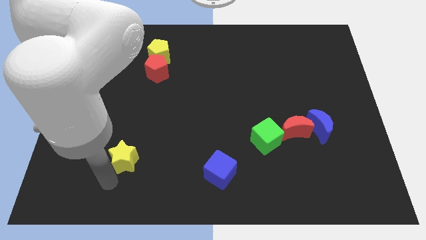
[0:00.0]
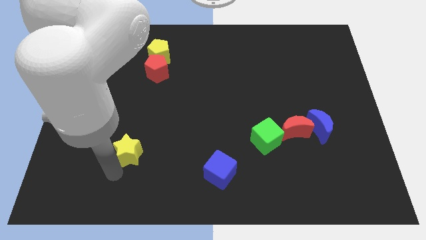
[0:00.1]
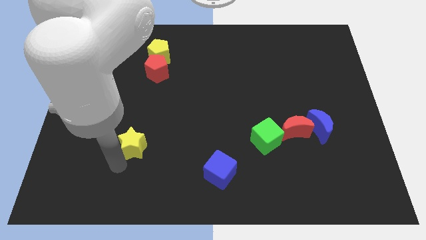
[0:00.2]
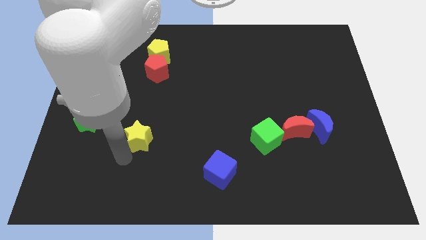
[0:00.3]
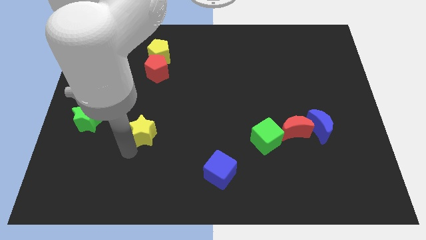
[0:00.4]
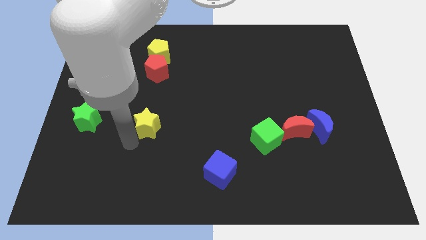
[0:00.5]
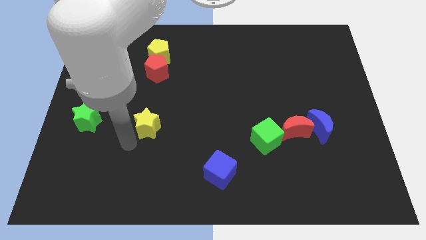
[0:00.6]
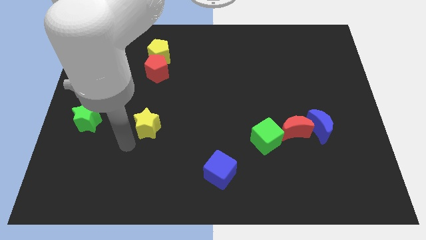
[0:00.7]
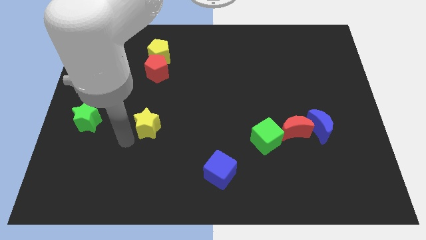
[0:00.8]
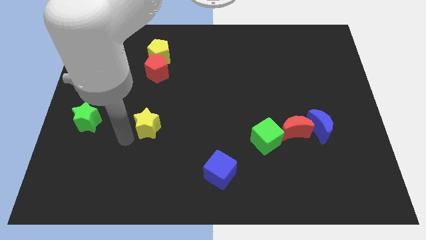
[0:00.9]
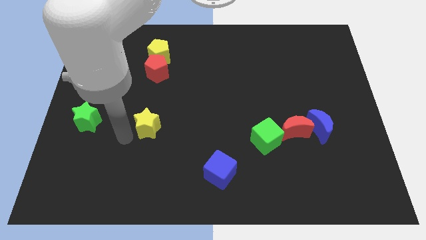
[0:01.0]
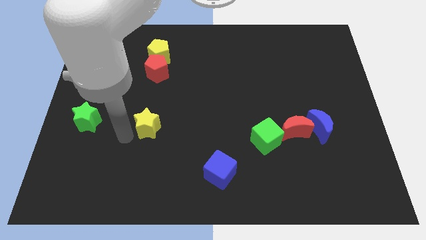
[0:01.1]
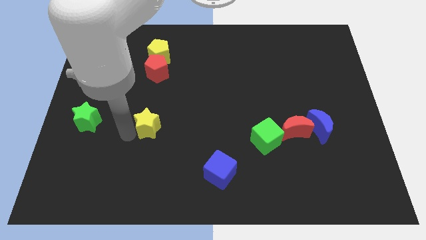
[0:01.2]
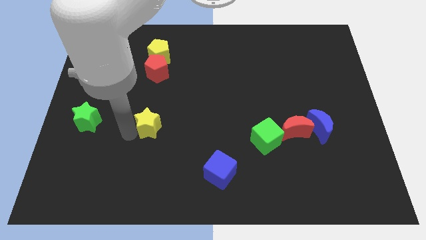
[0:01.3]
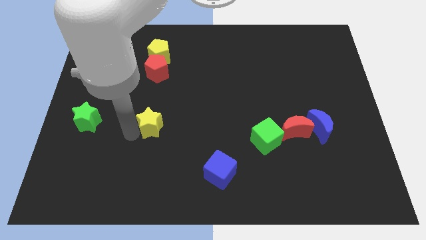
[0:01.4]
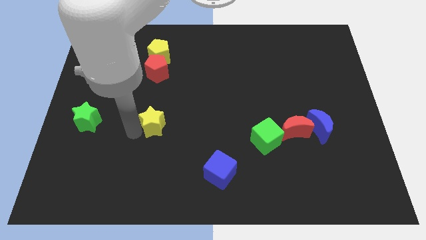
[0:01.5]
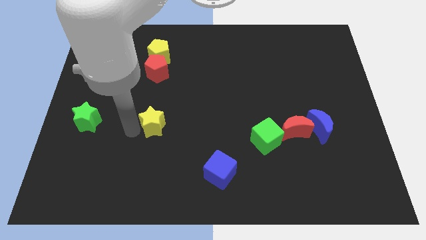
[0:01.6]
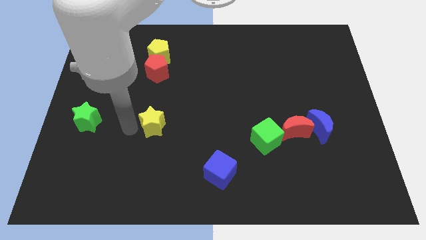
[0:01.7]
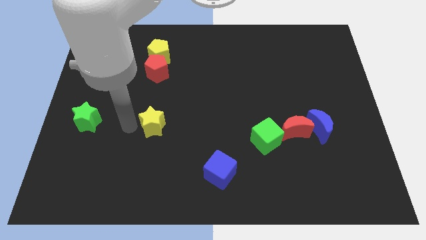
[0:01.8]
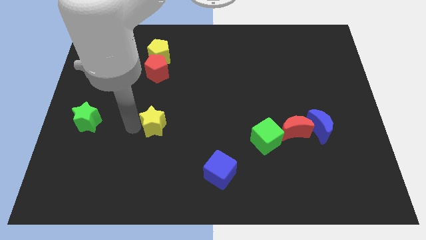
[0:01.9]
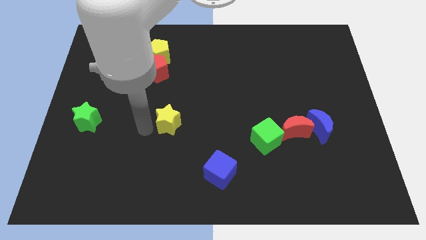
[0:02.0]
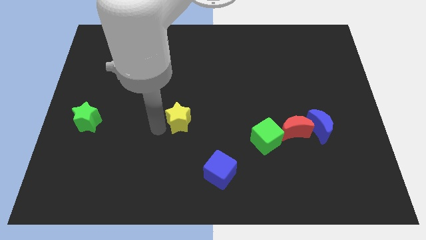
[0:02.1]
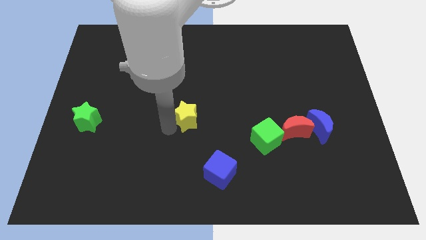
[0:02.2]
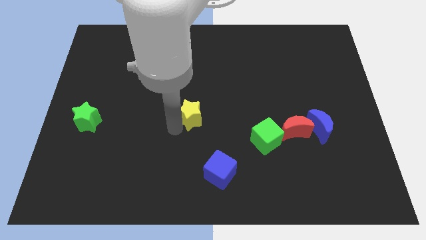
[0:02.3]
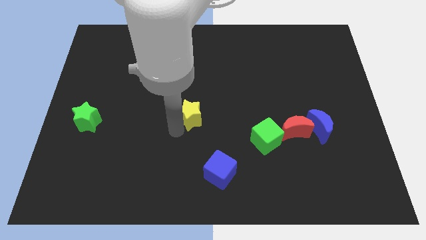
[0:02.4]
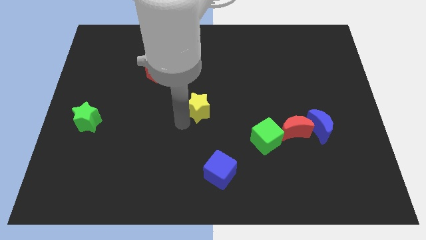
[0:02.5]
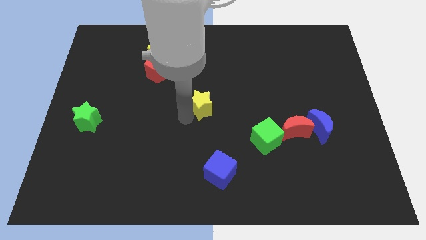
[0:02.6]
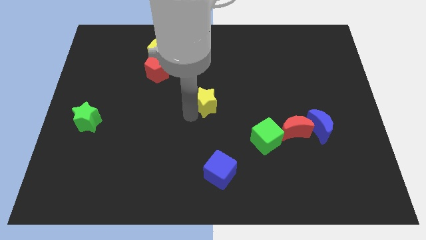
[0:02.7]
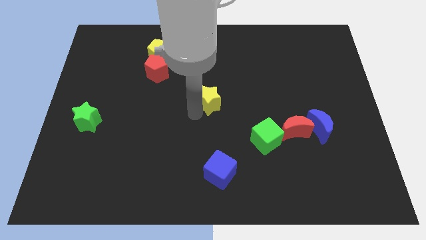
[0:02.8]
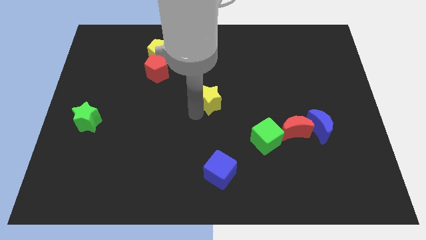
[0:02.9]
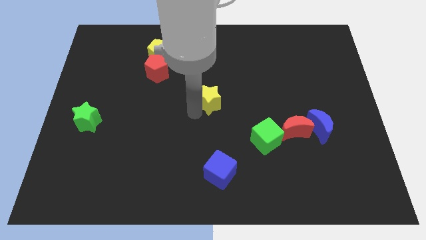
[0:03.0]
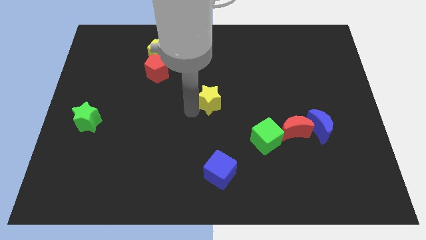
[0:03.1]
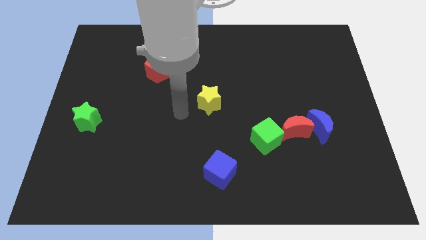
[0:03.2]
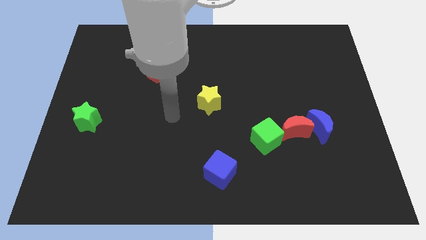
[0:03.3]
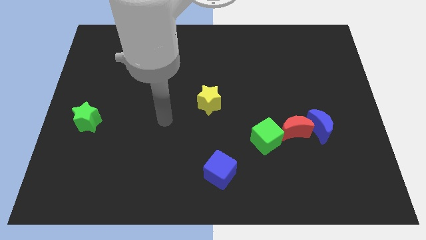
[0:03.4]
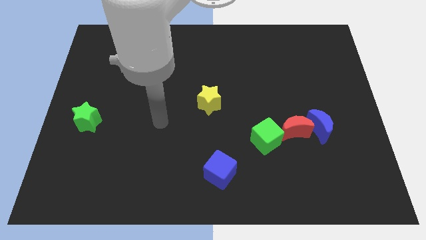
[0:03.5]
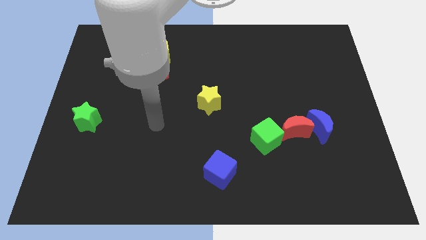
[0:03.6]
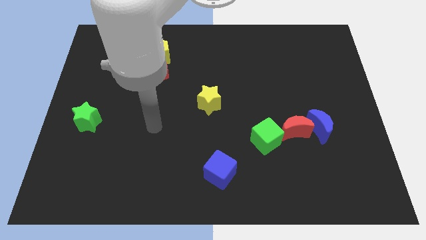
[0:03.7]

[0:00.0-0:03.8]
push the yellow star to the vertical top of the blue cube

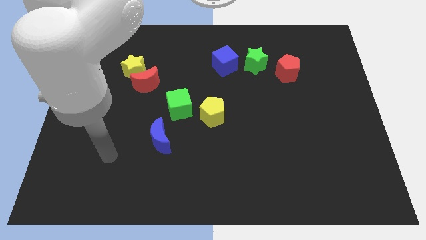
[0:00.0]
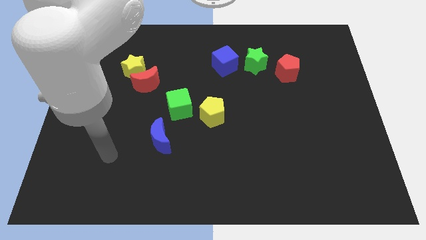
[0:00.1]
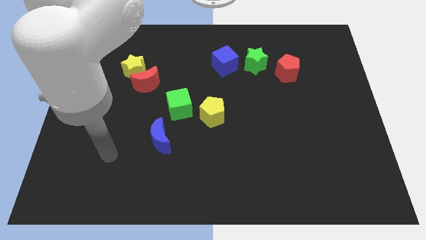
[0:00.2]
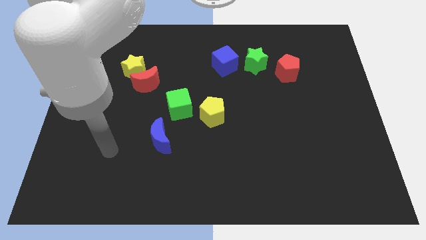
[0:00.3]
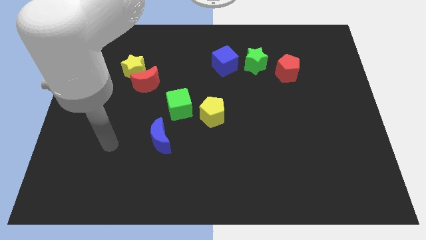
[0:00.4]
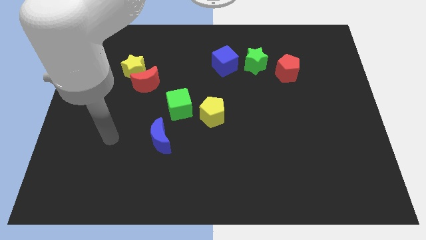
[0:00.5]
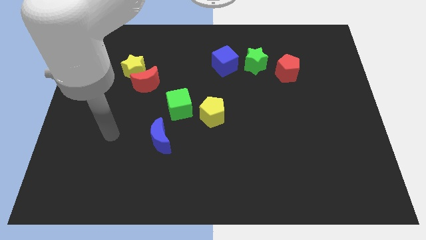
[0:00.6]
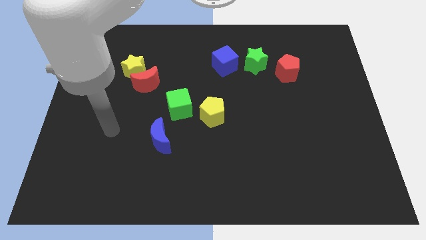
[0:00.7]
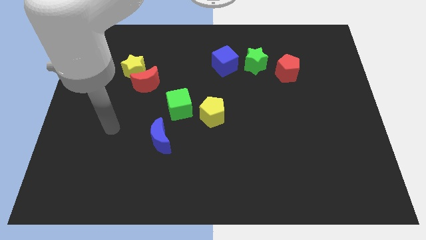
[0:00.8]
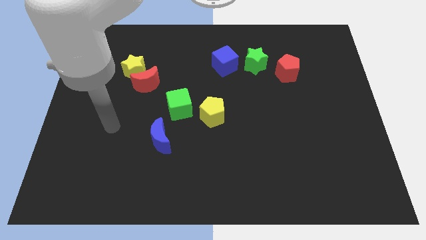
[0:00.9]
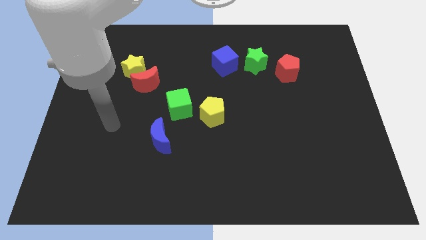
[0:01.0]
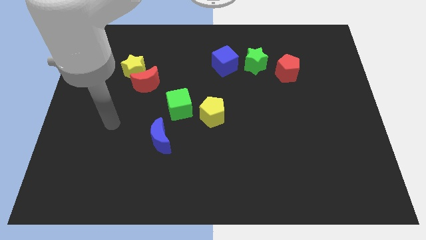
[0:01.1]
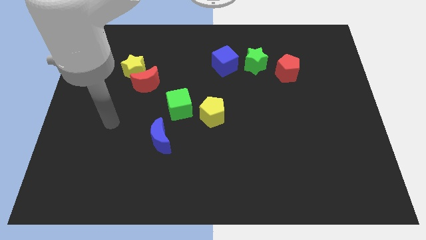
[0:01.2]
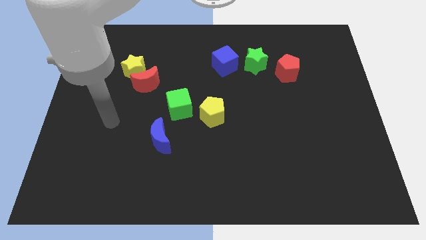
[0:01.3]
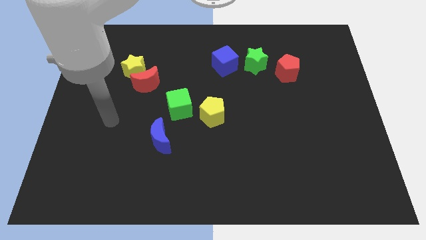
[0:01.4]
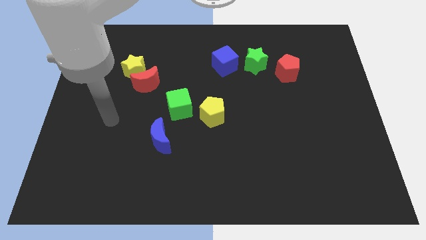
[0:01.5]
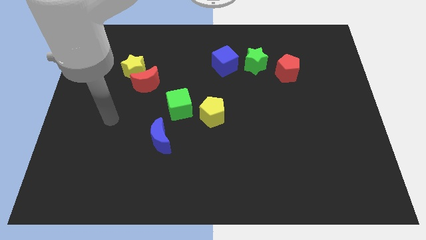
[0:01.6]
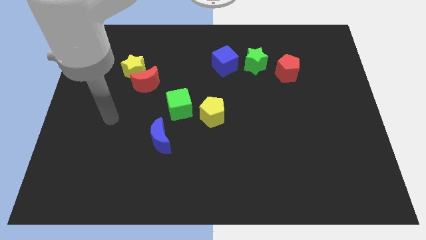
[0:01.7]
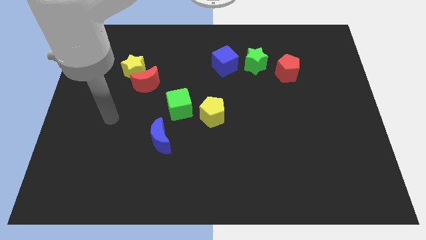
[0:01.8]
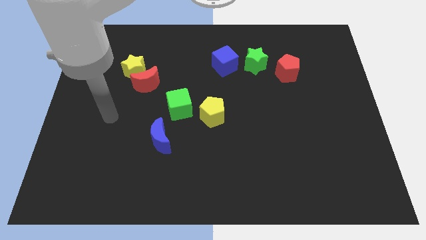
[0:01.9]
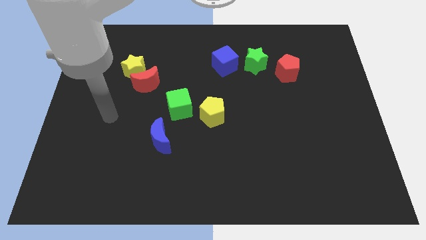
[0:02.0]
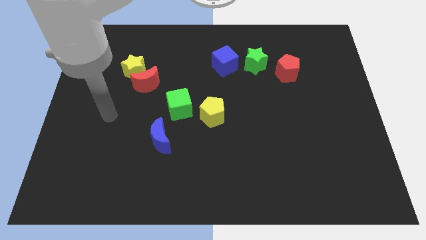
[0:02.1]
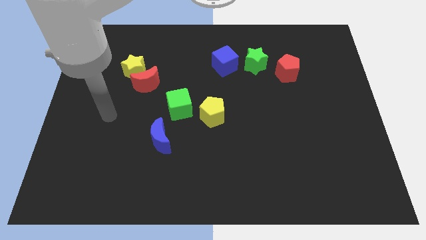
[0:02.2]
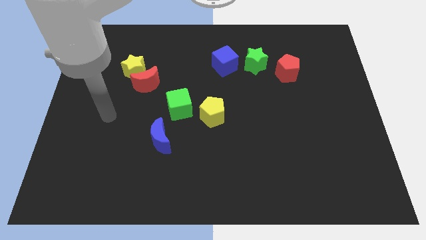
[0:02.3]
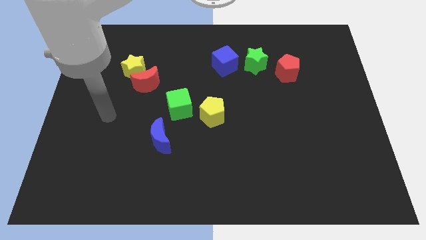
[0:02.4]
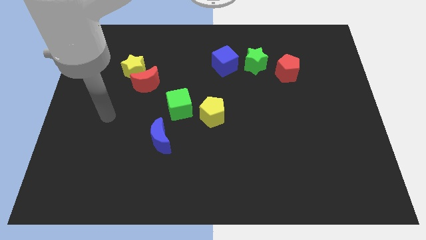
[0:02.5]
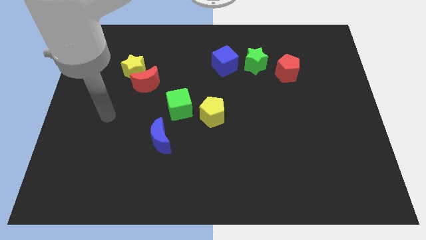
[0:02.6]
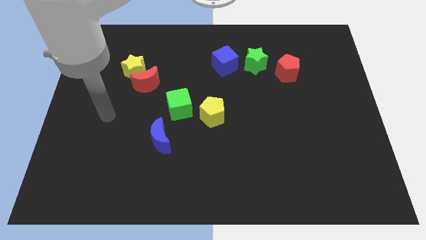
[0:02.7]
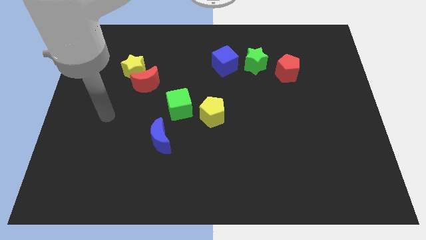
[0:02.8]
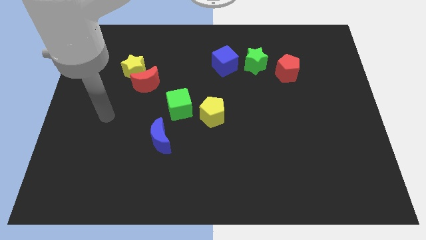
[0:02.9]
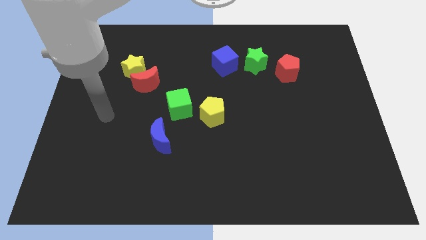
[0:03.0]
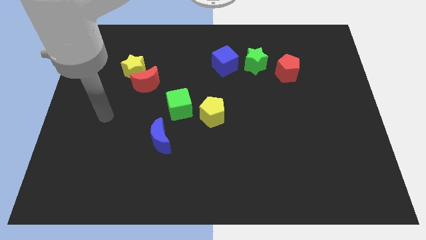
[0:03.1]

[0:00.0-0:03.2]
move your arm upwards

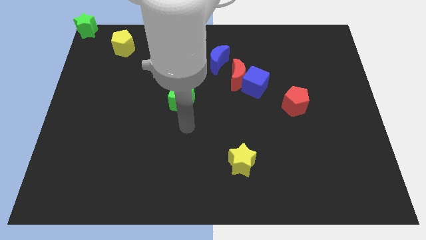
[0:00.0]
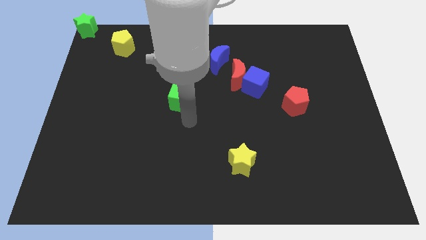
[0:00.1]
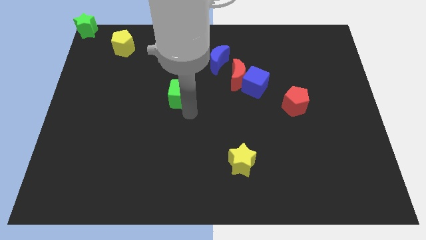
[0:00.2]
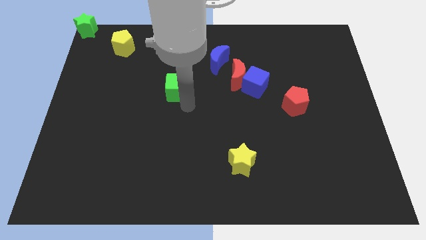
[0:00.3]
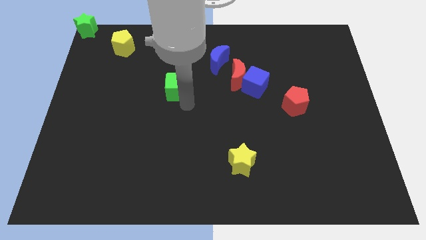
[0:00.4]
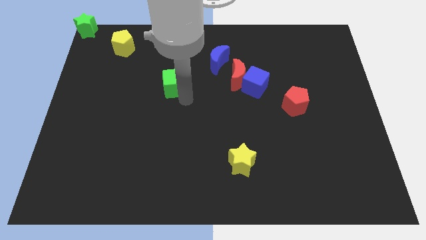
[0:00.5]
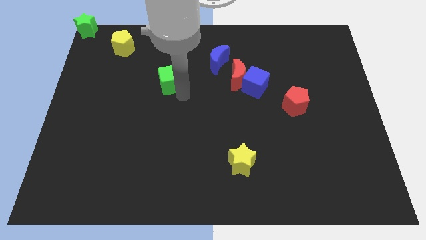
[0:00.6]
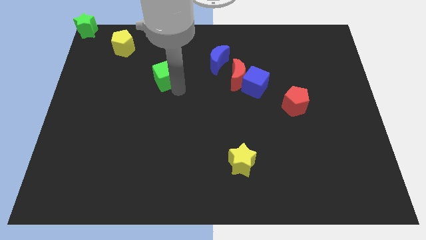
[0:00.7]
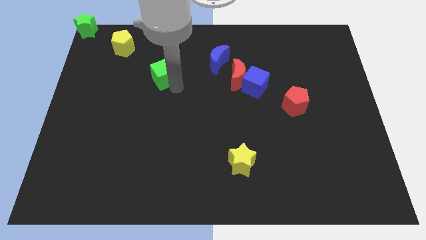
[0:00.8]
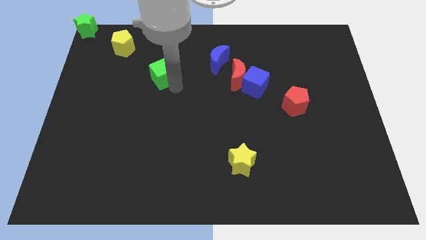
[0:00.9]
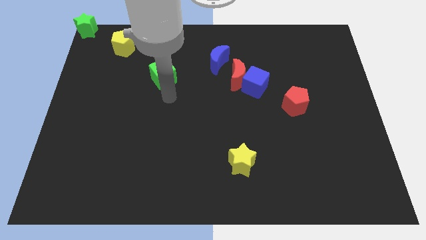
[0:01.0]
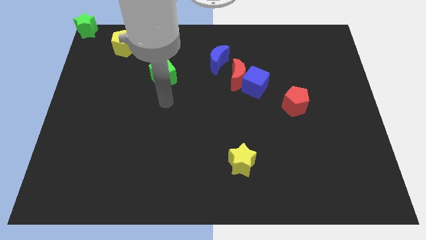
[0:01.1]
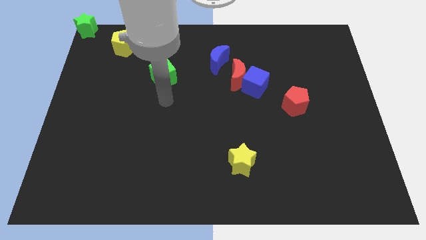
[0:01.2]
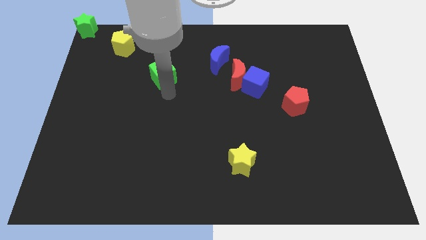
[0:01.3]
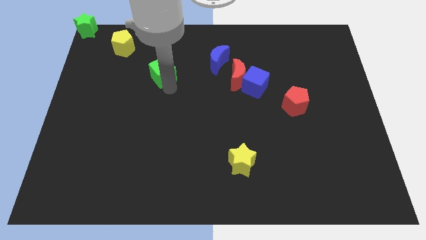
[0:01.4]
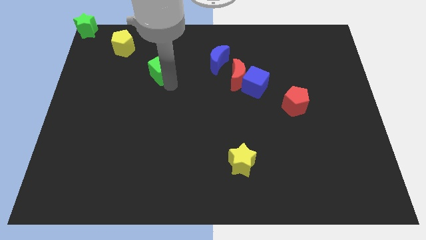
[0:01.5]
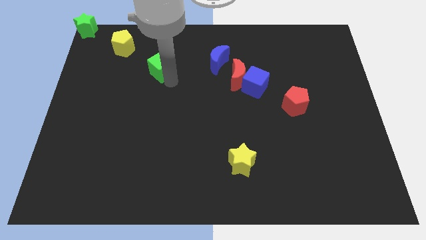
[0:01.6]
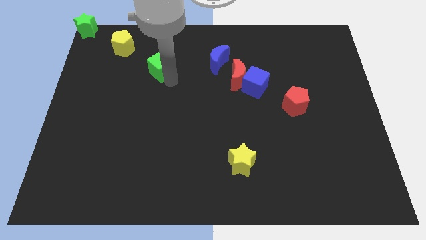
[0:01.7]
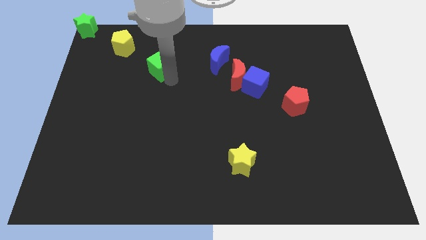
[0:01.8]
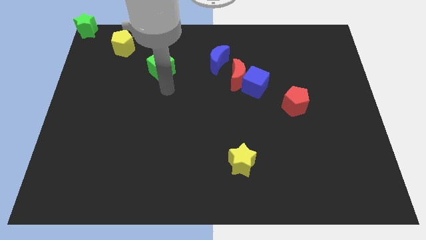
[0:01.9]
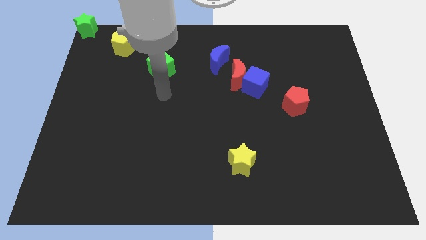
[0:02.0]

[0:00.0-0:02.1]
line up the green cube yellow pentagon and green star diagonally
